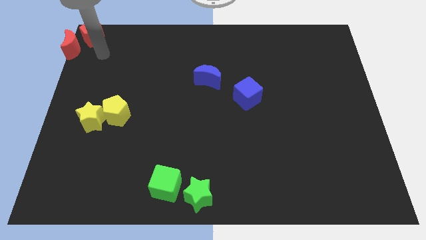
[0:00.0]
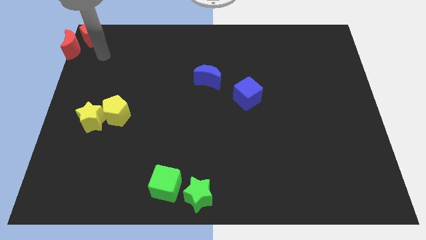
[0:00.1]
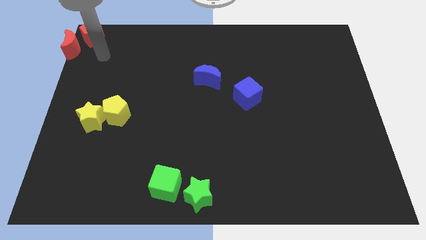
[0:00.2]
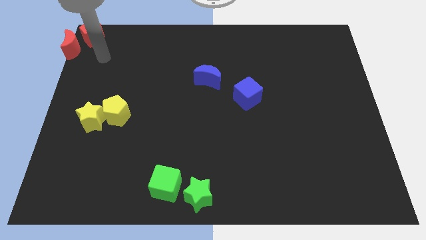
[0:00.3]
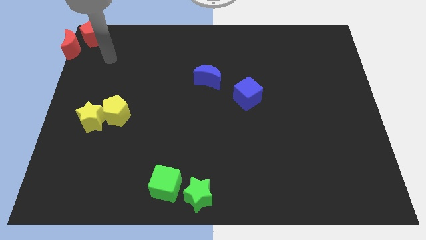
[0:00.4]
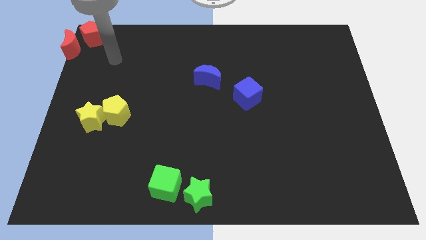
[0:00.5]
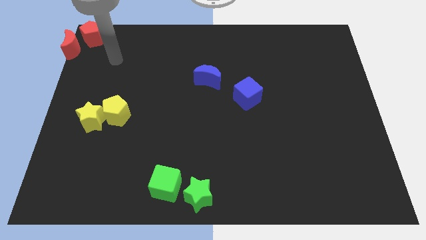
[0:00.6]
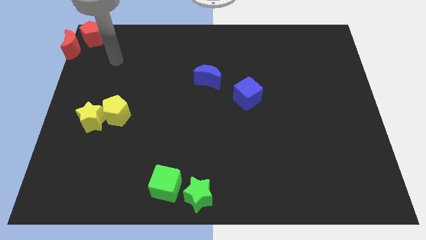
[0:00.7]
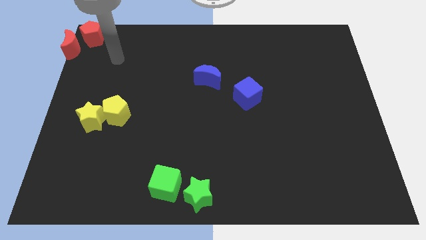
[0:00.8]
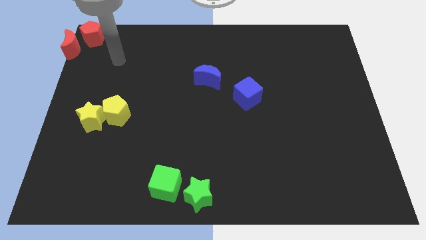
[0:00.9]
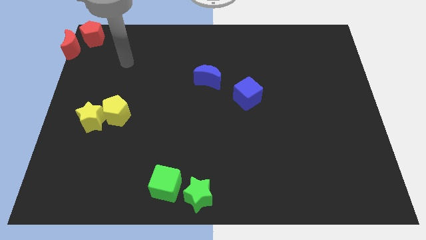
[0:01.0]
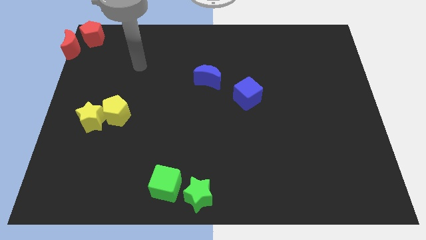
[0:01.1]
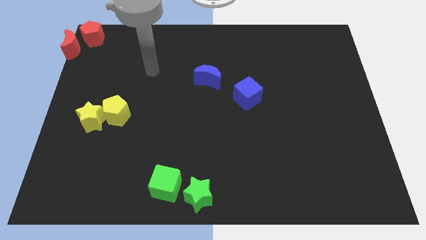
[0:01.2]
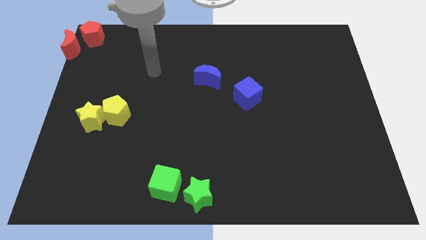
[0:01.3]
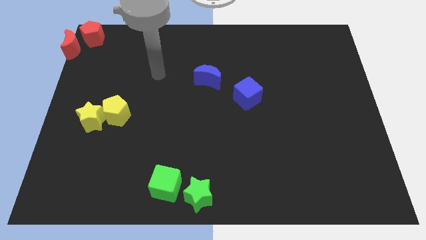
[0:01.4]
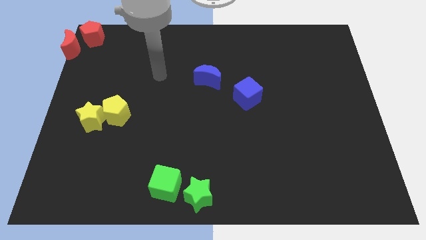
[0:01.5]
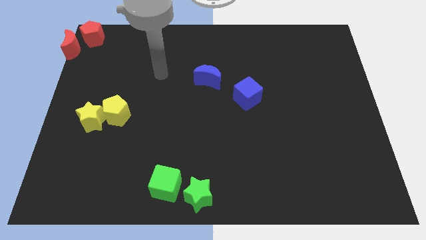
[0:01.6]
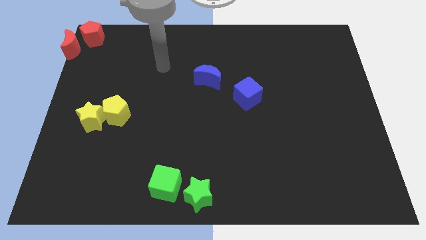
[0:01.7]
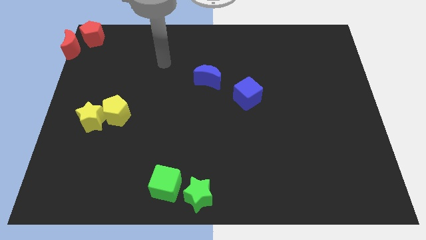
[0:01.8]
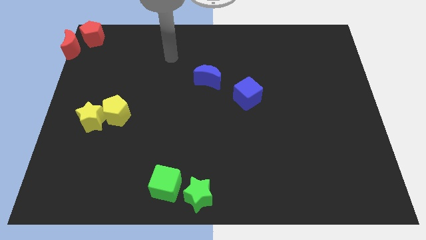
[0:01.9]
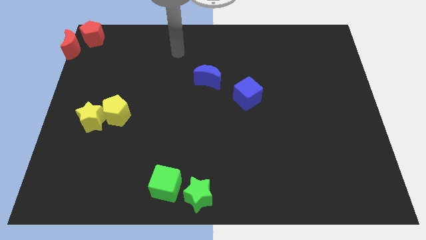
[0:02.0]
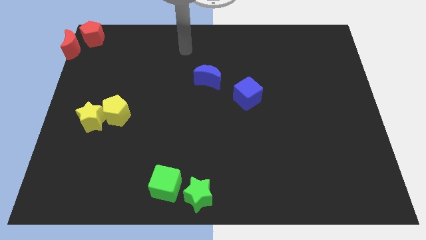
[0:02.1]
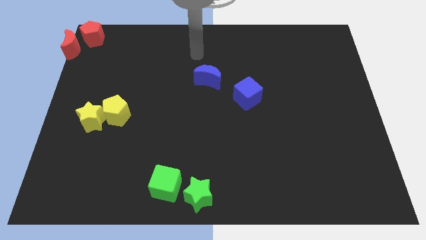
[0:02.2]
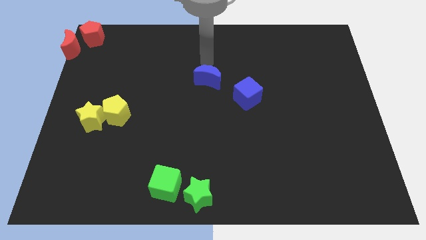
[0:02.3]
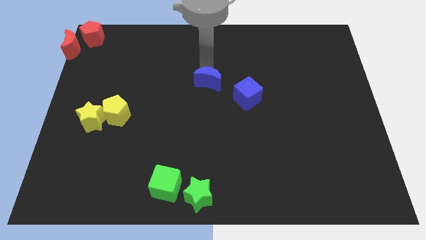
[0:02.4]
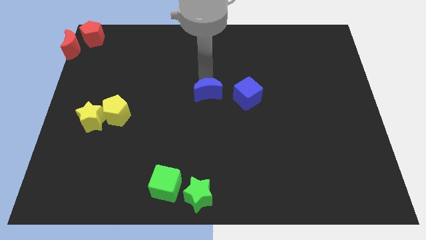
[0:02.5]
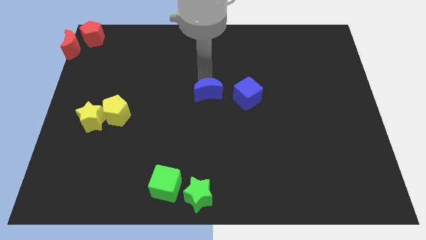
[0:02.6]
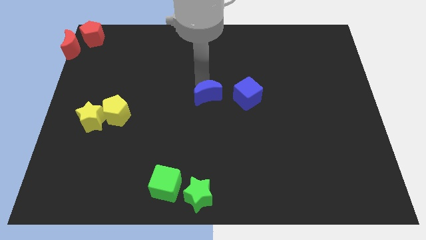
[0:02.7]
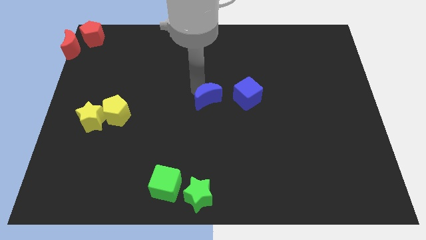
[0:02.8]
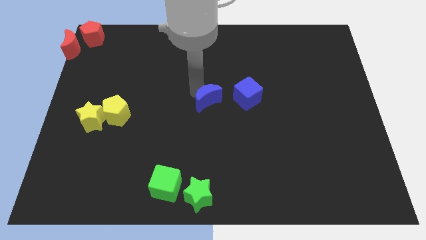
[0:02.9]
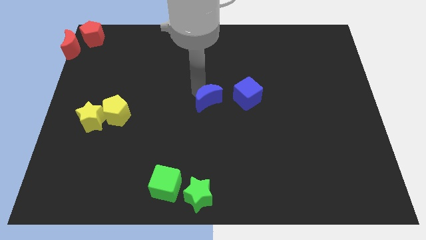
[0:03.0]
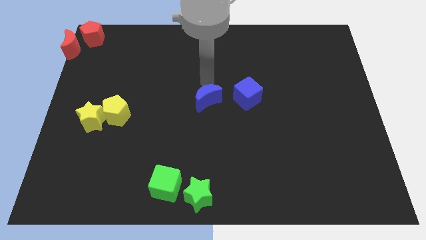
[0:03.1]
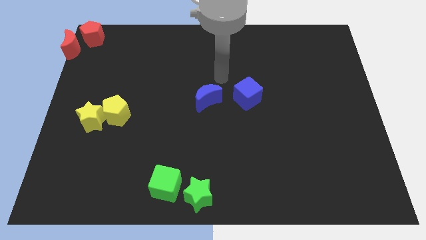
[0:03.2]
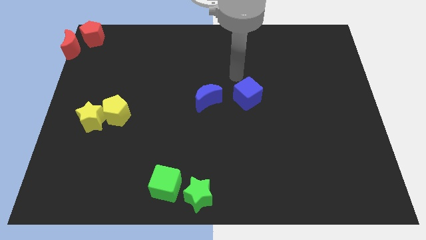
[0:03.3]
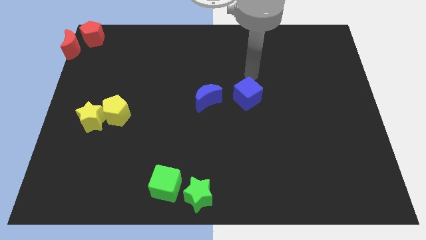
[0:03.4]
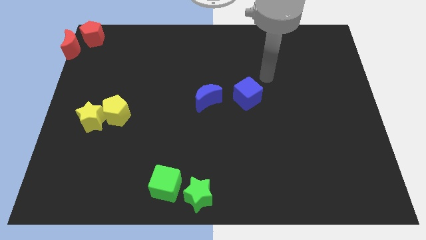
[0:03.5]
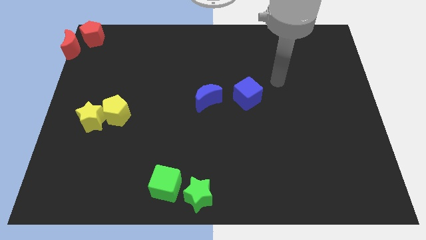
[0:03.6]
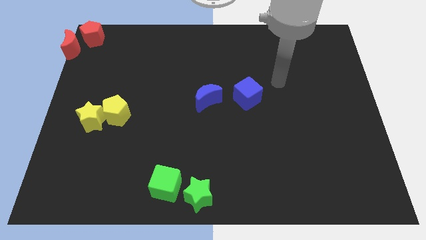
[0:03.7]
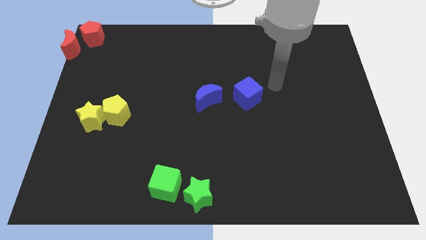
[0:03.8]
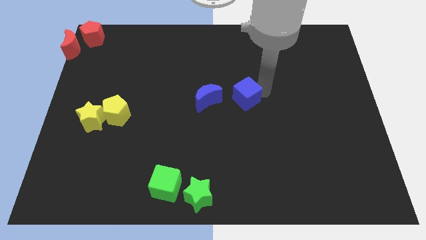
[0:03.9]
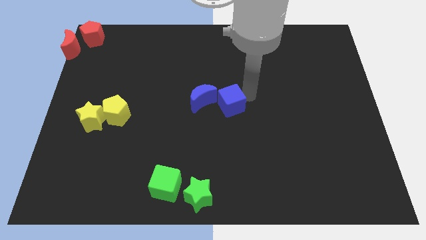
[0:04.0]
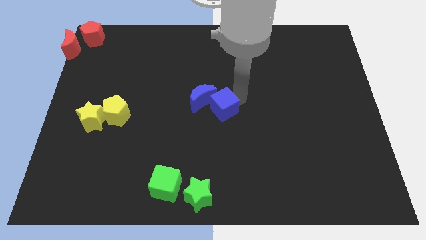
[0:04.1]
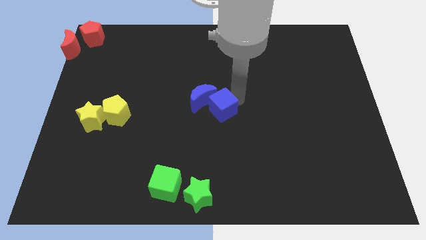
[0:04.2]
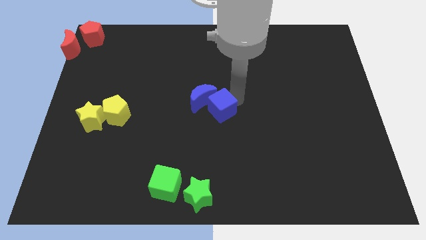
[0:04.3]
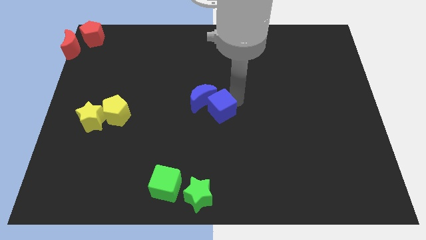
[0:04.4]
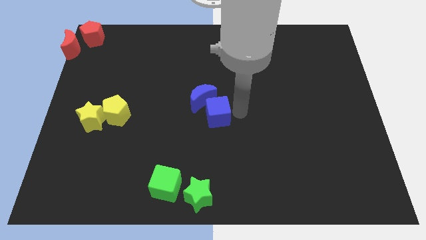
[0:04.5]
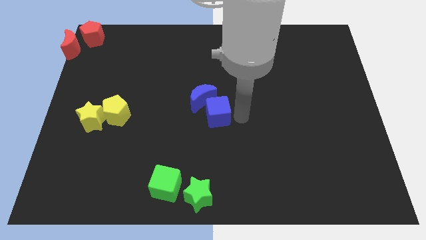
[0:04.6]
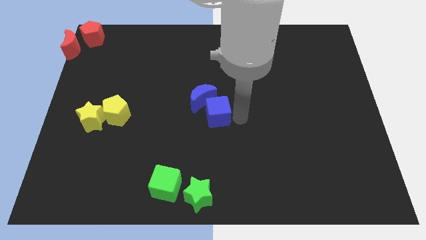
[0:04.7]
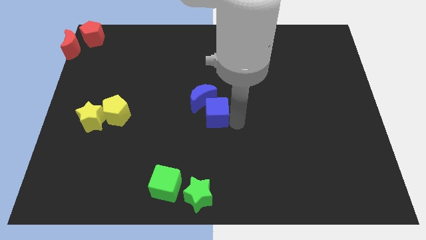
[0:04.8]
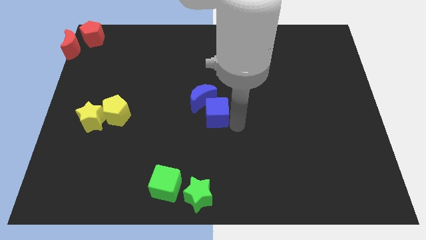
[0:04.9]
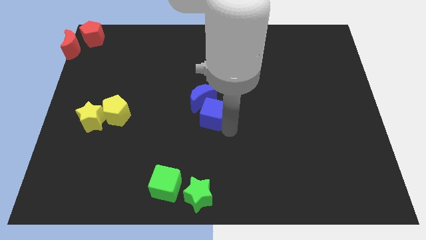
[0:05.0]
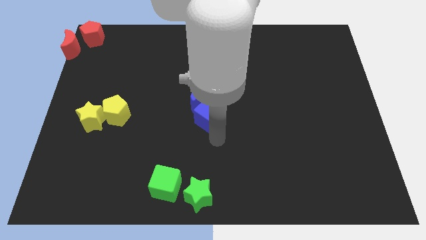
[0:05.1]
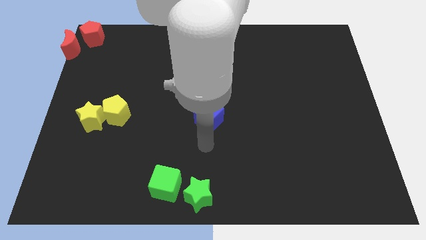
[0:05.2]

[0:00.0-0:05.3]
push the blue cube below to the blue crescent

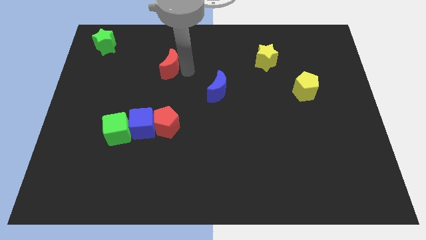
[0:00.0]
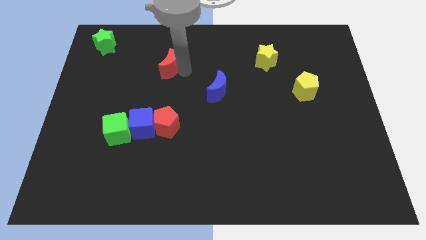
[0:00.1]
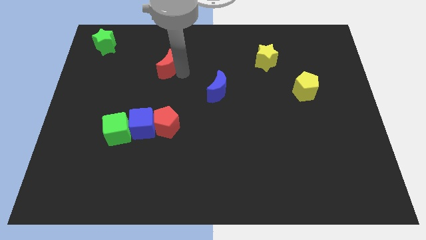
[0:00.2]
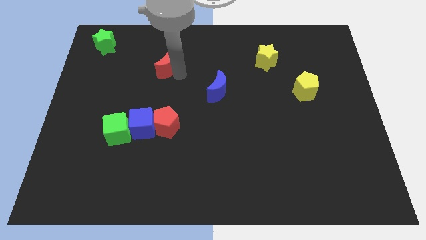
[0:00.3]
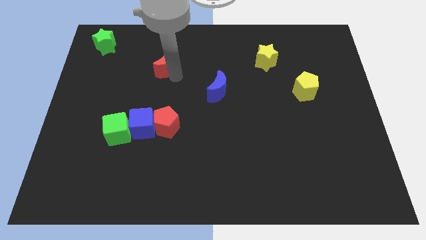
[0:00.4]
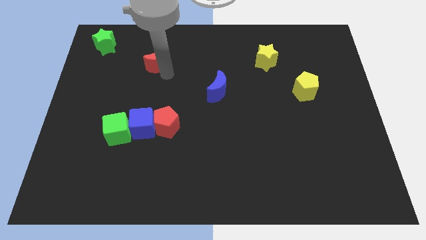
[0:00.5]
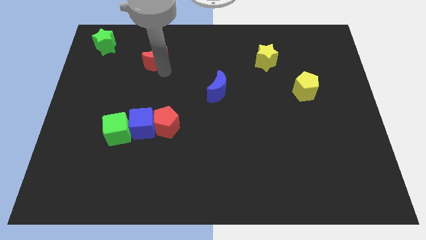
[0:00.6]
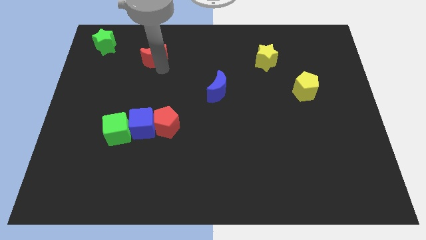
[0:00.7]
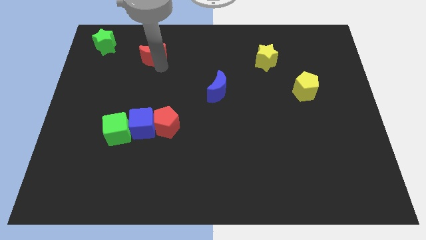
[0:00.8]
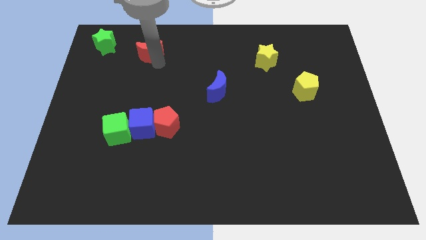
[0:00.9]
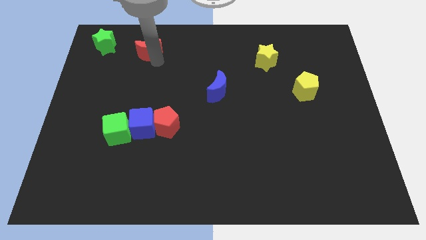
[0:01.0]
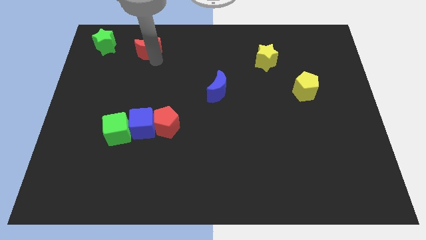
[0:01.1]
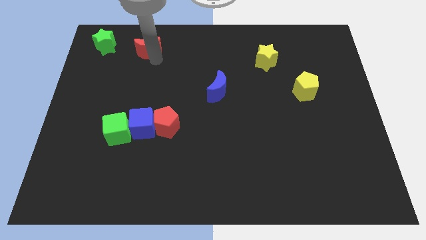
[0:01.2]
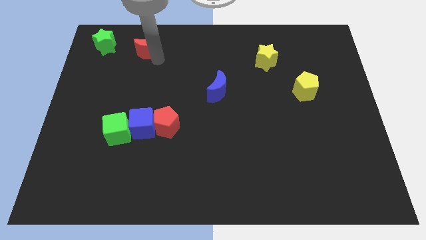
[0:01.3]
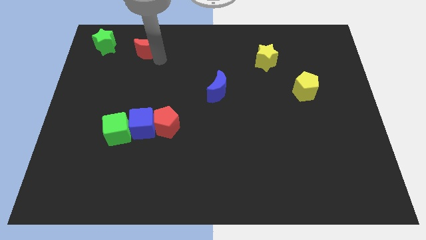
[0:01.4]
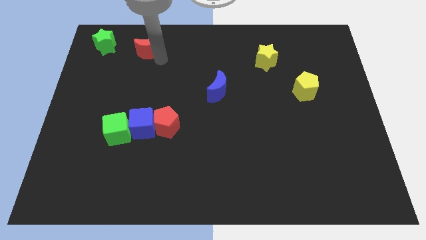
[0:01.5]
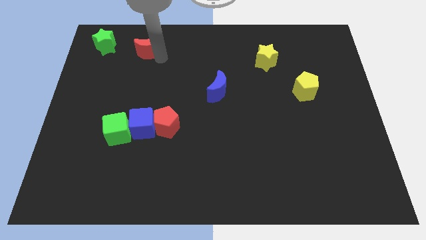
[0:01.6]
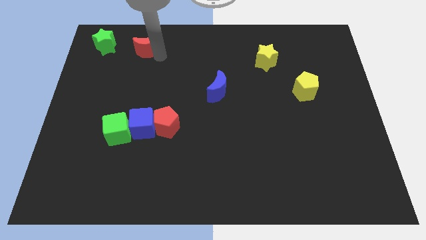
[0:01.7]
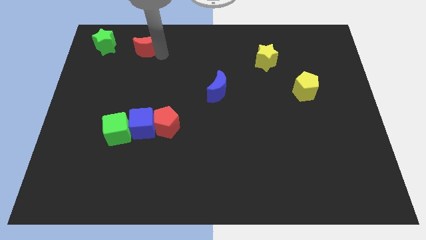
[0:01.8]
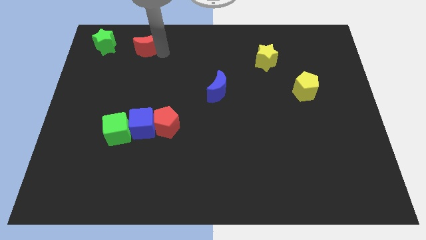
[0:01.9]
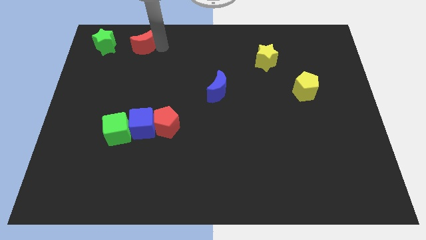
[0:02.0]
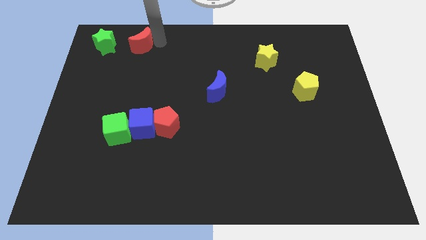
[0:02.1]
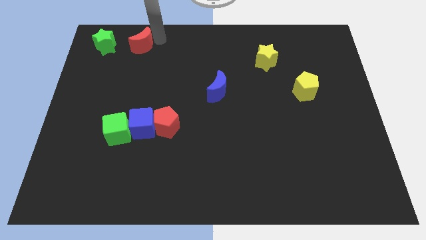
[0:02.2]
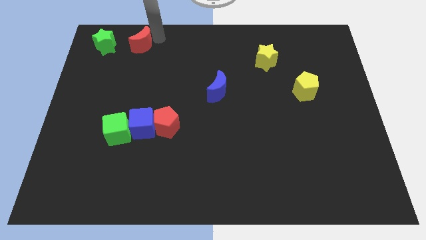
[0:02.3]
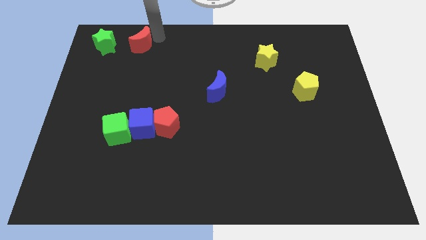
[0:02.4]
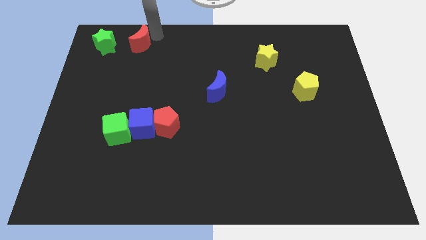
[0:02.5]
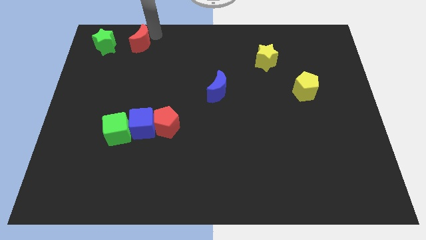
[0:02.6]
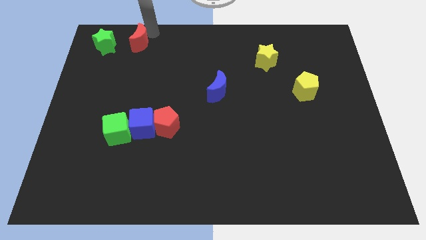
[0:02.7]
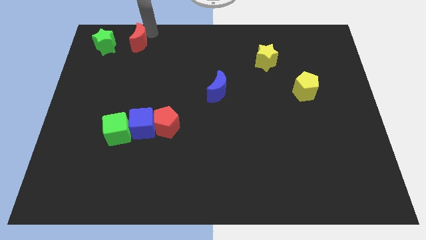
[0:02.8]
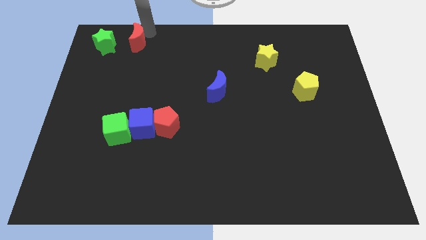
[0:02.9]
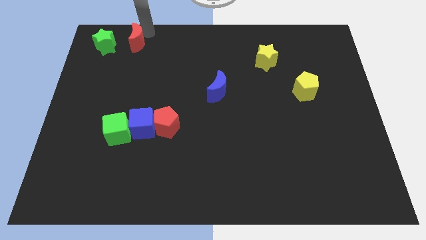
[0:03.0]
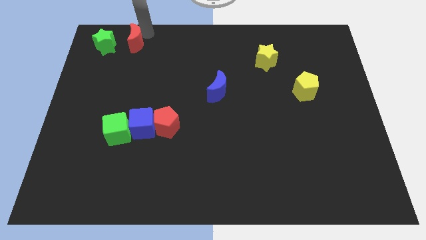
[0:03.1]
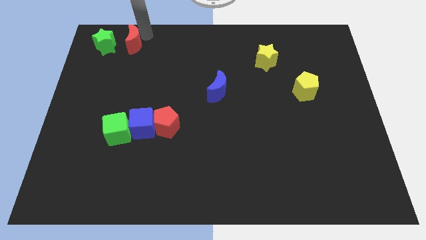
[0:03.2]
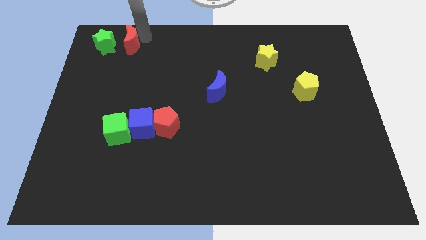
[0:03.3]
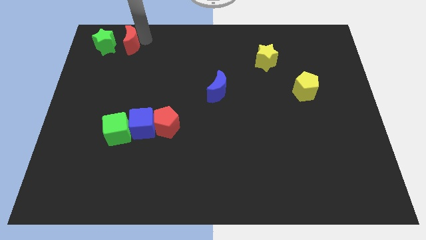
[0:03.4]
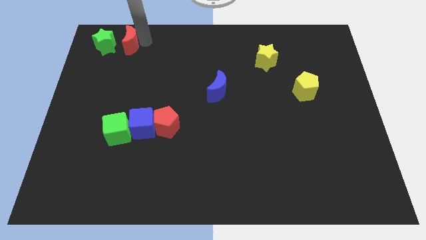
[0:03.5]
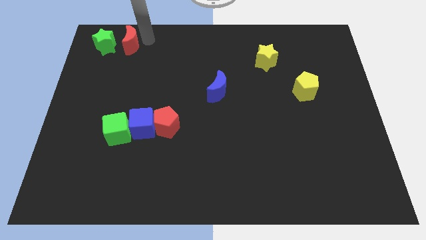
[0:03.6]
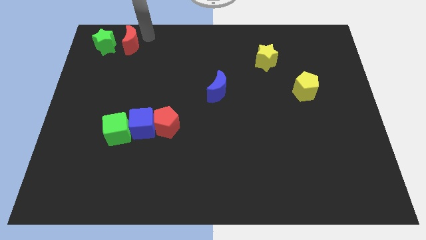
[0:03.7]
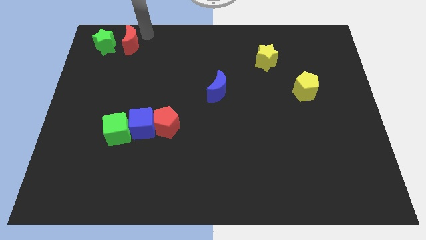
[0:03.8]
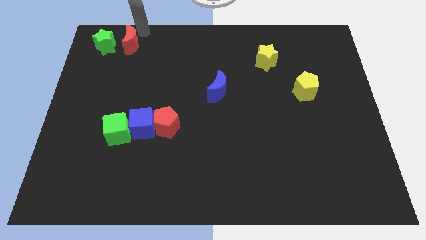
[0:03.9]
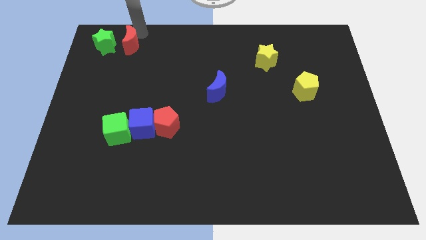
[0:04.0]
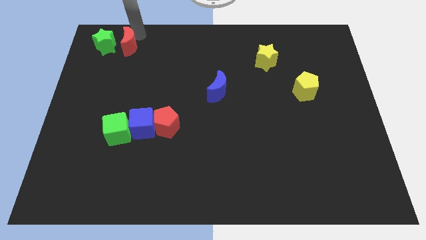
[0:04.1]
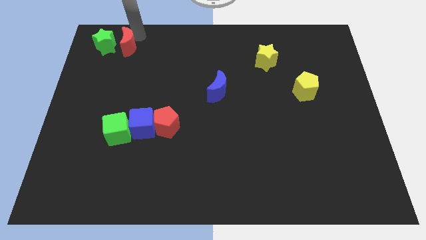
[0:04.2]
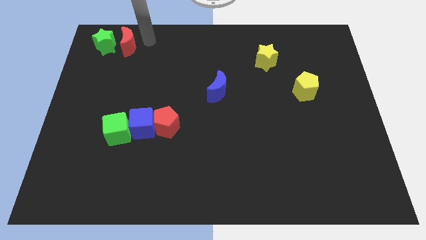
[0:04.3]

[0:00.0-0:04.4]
place red crescent towards green star
